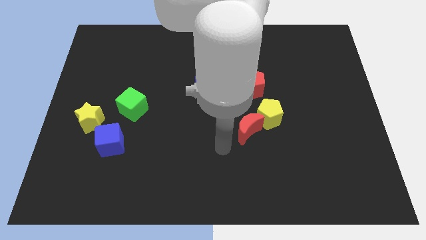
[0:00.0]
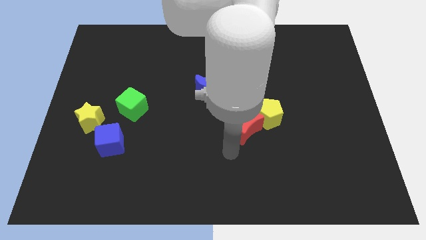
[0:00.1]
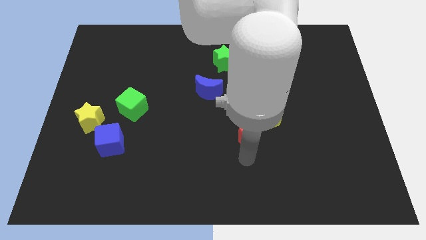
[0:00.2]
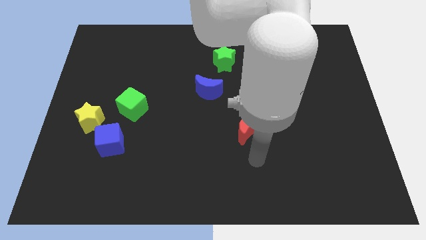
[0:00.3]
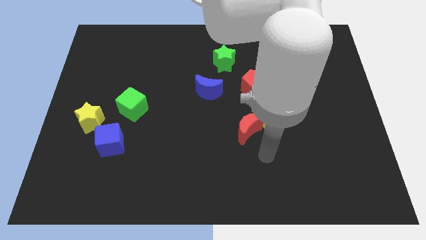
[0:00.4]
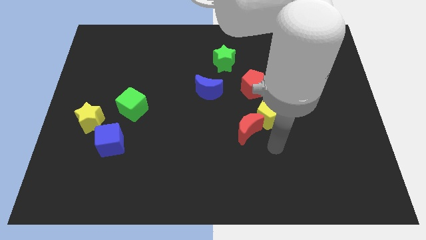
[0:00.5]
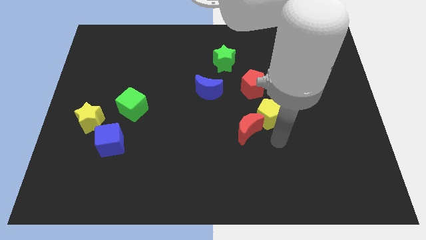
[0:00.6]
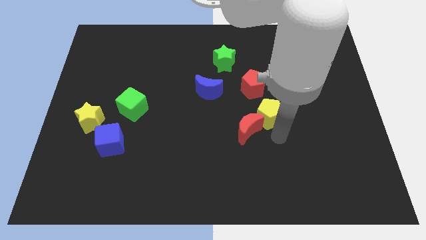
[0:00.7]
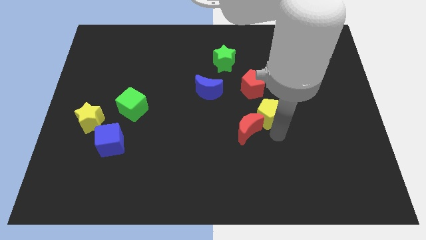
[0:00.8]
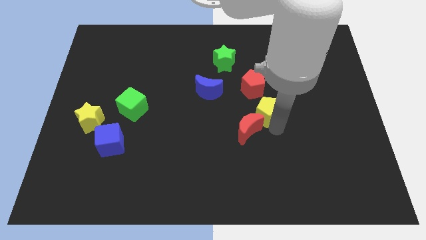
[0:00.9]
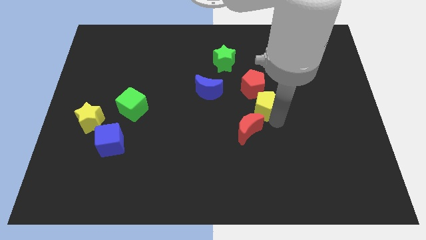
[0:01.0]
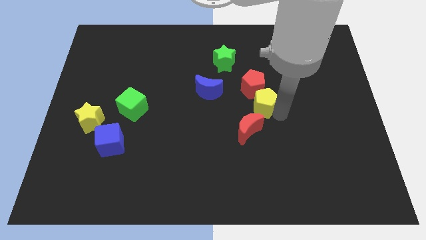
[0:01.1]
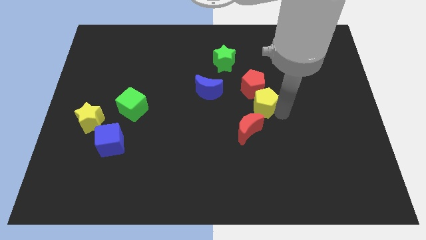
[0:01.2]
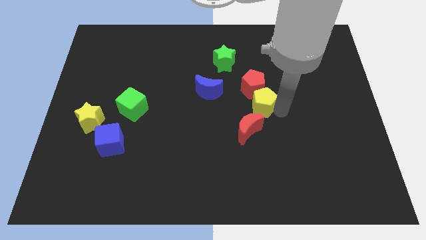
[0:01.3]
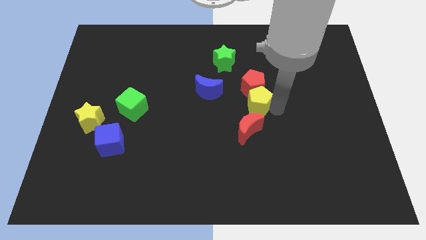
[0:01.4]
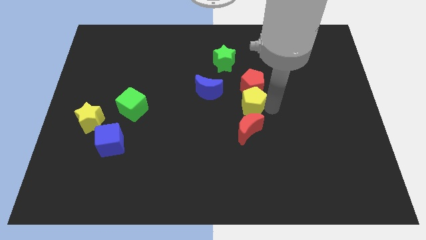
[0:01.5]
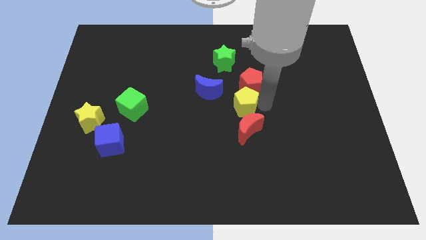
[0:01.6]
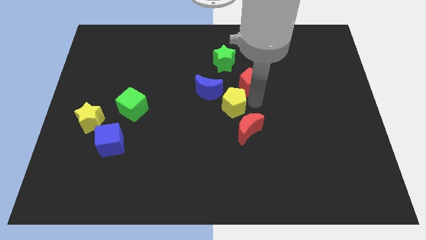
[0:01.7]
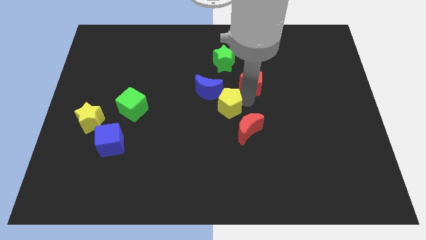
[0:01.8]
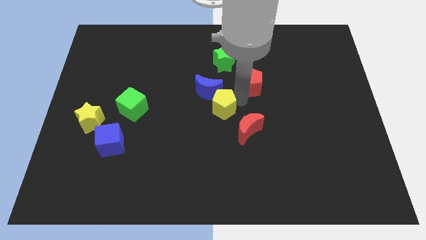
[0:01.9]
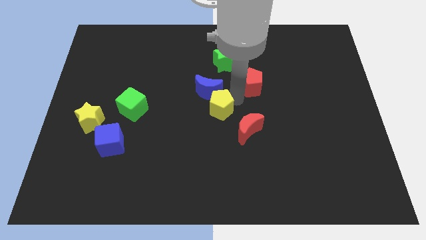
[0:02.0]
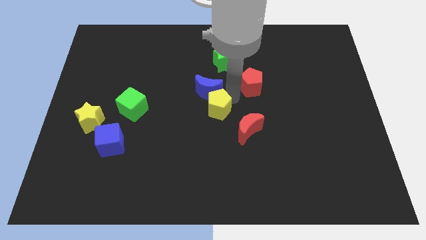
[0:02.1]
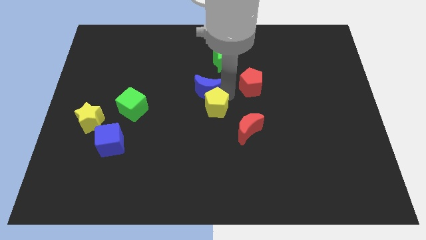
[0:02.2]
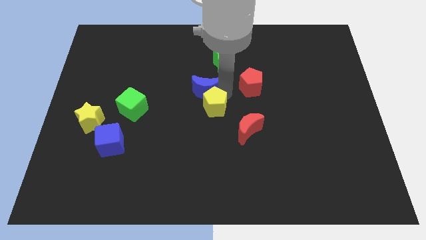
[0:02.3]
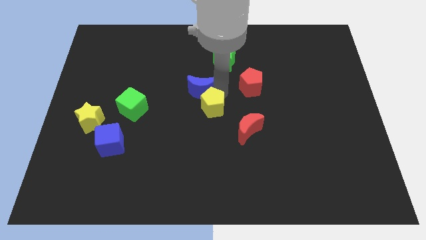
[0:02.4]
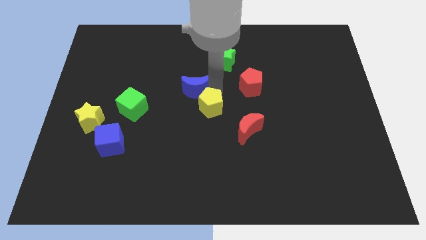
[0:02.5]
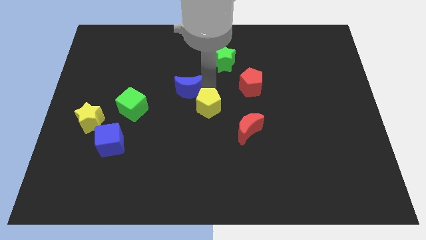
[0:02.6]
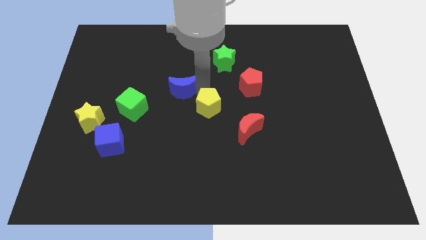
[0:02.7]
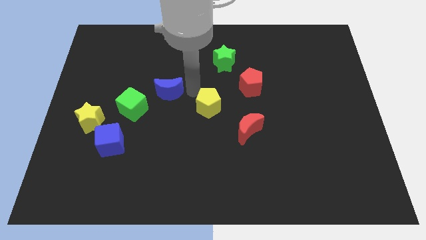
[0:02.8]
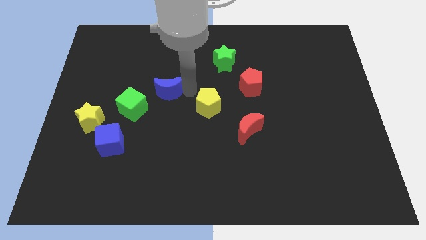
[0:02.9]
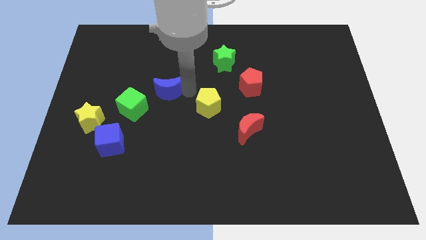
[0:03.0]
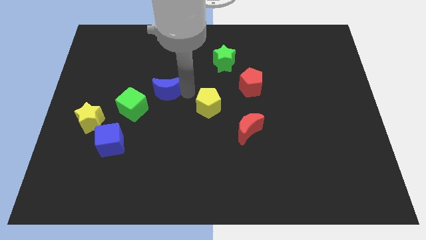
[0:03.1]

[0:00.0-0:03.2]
move blue moon slightly left along with the yellow pentagon

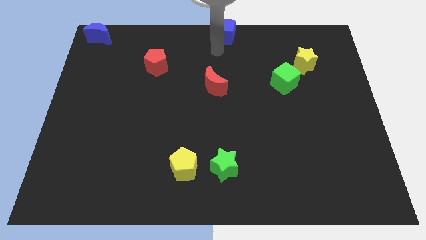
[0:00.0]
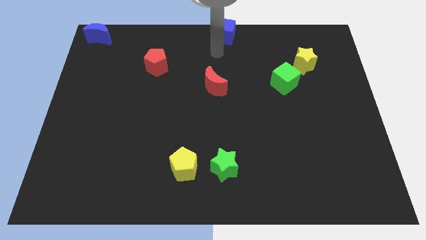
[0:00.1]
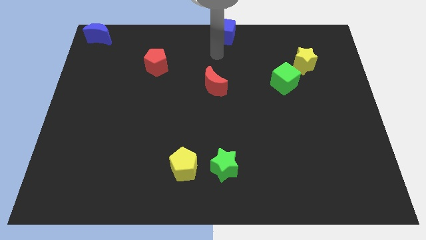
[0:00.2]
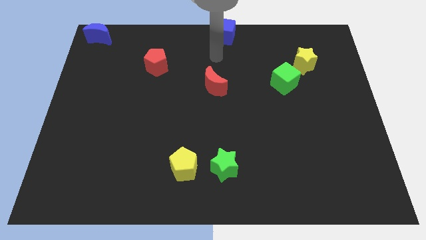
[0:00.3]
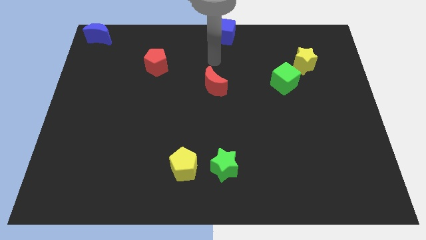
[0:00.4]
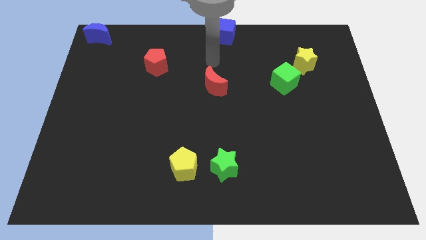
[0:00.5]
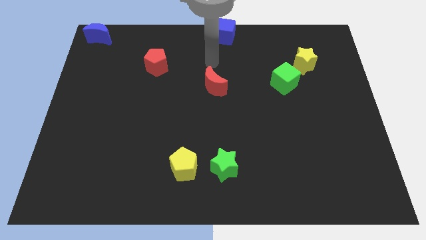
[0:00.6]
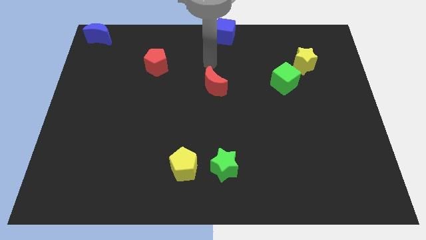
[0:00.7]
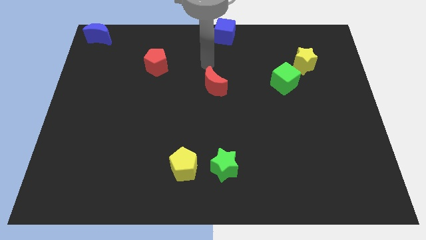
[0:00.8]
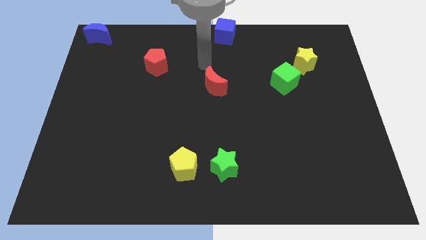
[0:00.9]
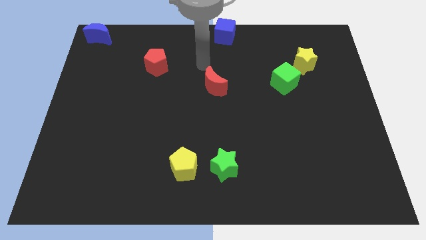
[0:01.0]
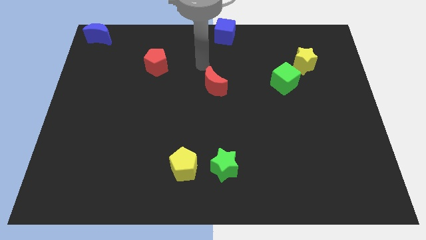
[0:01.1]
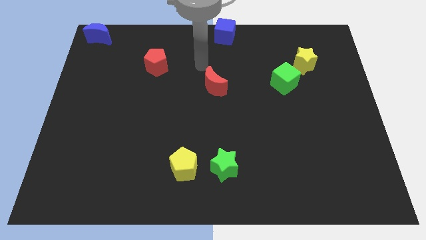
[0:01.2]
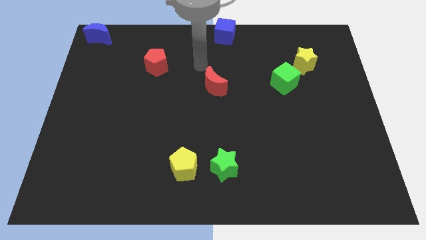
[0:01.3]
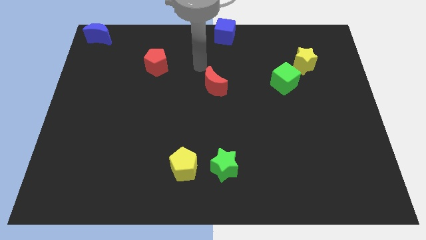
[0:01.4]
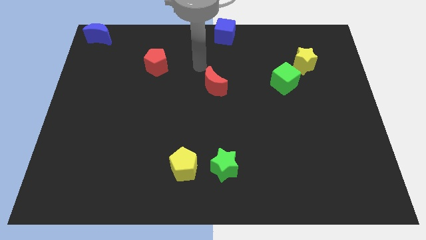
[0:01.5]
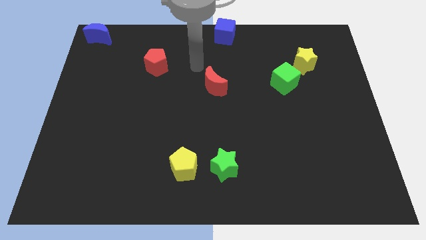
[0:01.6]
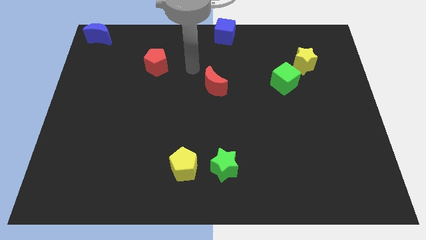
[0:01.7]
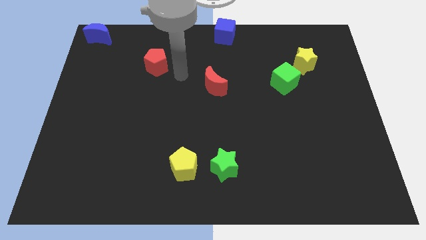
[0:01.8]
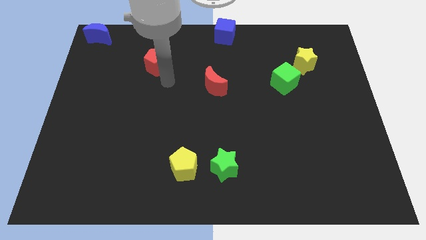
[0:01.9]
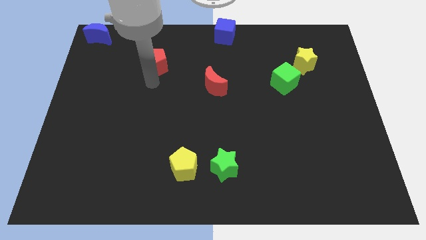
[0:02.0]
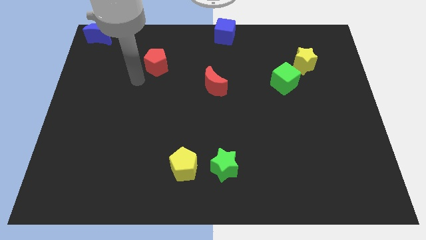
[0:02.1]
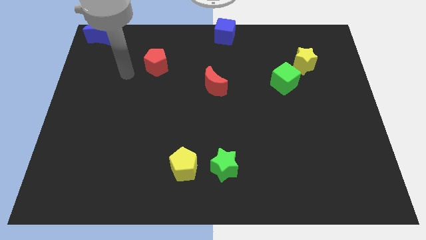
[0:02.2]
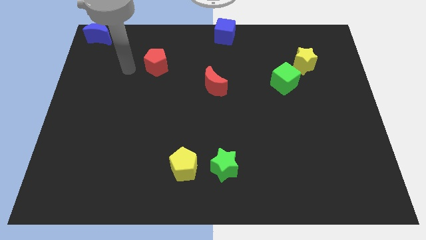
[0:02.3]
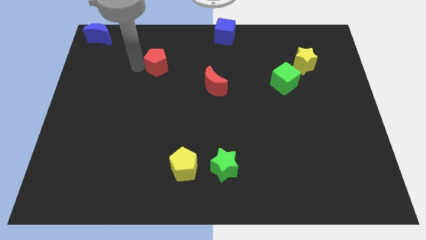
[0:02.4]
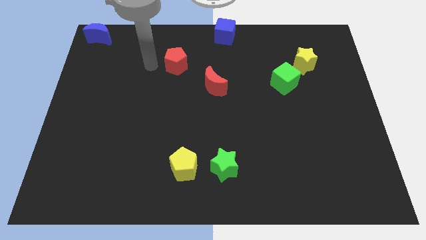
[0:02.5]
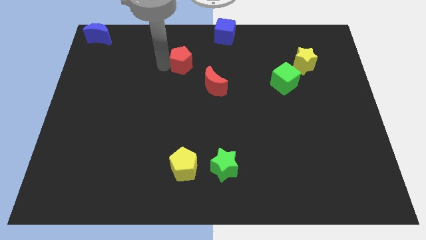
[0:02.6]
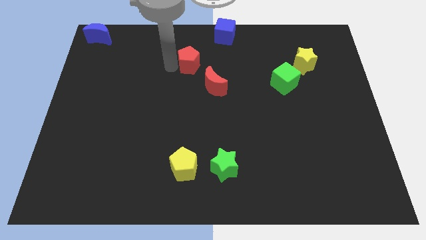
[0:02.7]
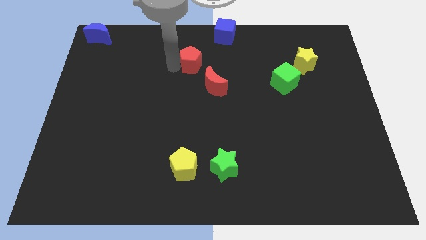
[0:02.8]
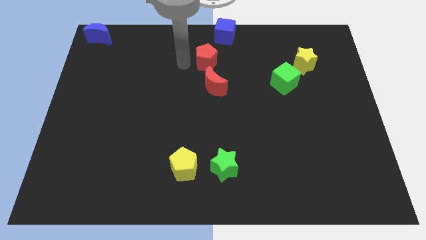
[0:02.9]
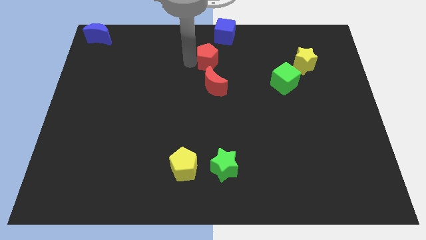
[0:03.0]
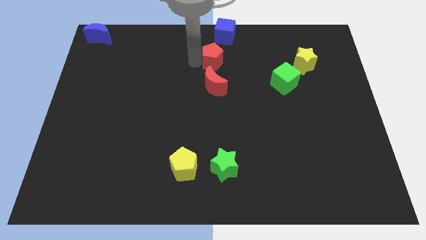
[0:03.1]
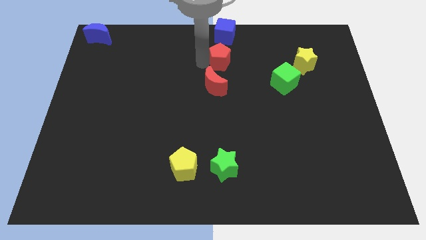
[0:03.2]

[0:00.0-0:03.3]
place the red pentagon in between the blue cube and red moon

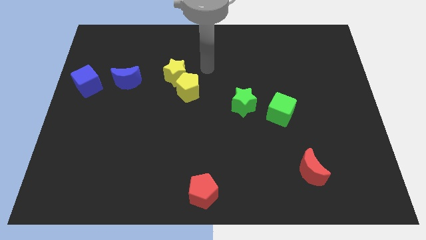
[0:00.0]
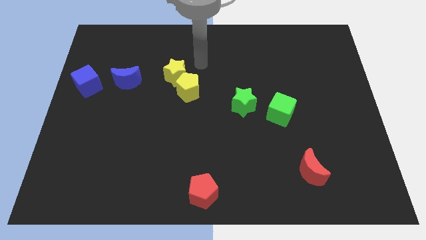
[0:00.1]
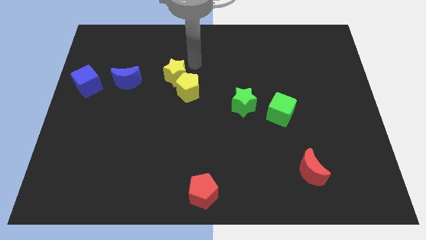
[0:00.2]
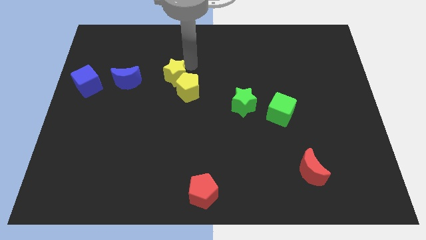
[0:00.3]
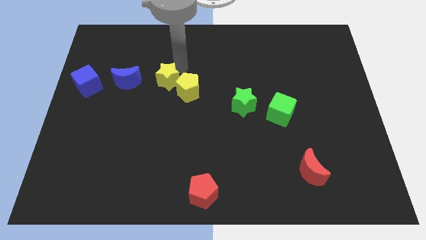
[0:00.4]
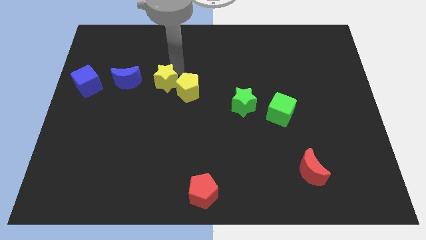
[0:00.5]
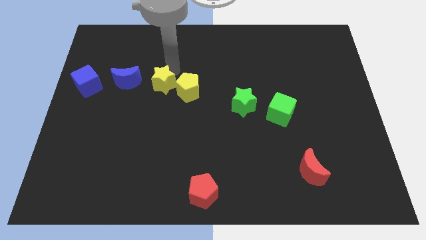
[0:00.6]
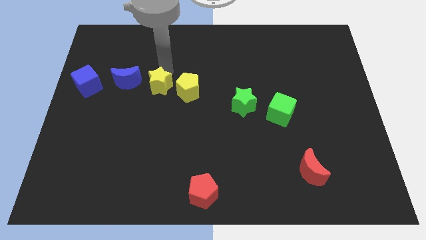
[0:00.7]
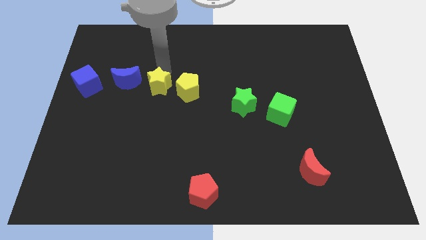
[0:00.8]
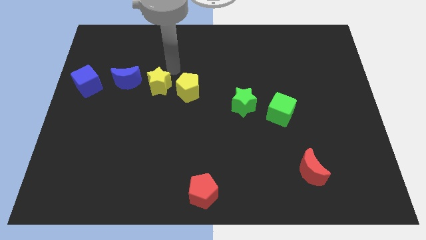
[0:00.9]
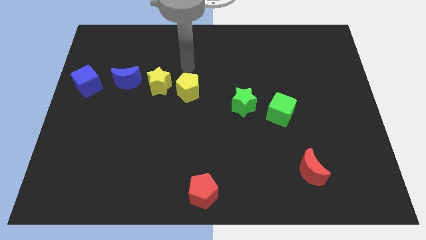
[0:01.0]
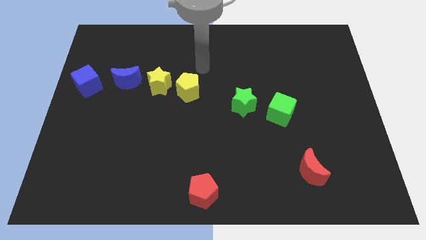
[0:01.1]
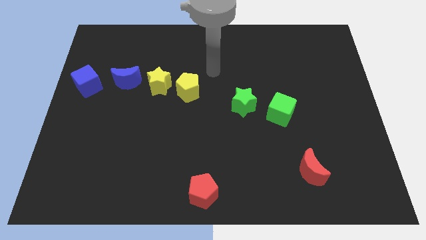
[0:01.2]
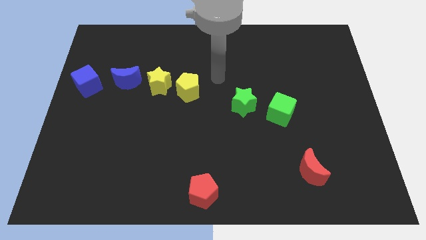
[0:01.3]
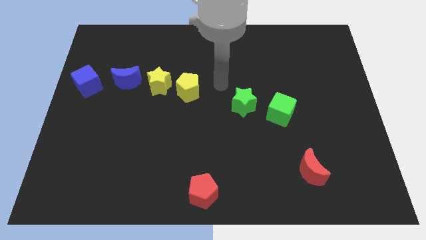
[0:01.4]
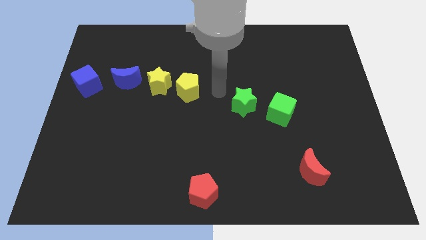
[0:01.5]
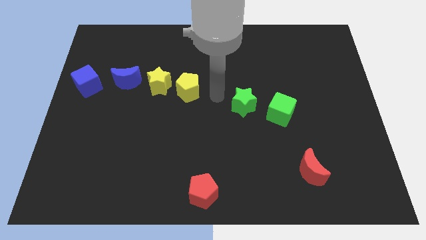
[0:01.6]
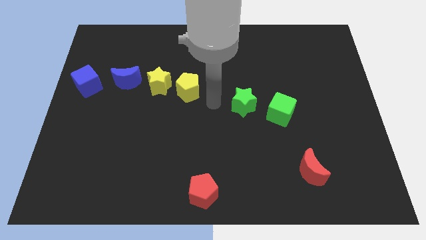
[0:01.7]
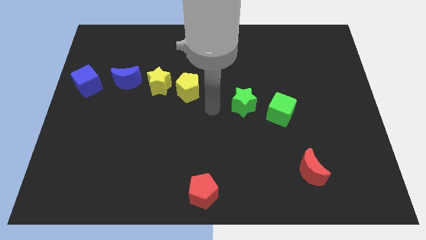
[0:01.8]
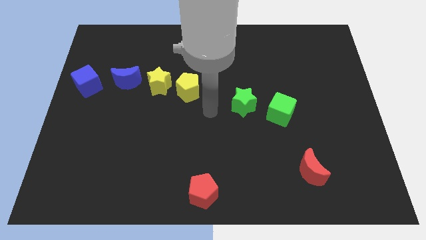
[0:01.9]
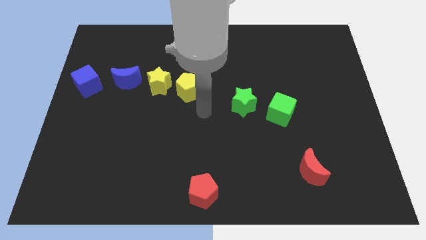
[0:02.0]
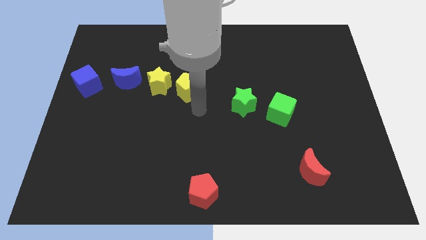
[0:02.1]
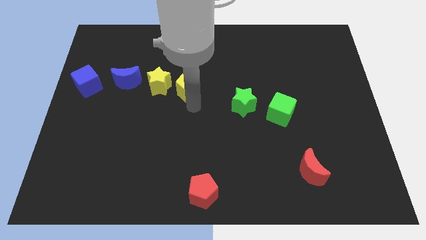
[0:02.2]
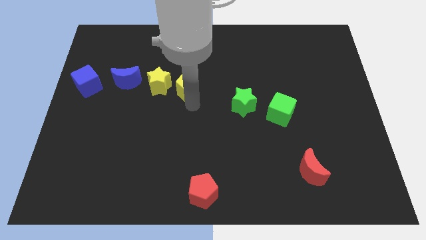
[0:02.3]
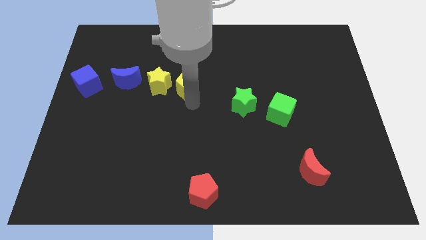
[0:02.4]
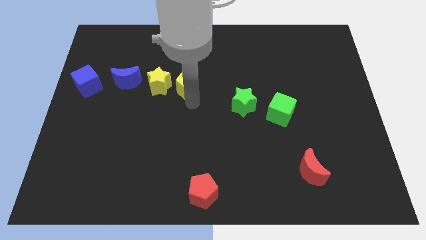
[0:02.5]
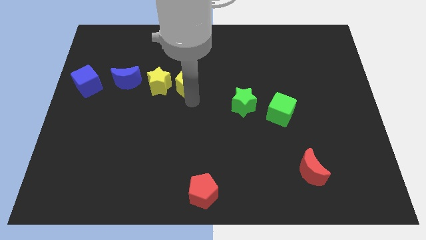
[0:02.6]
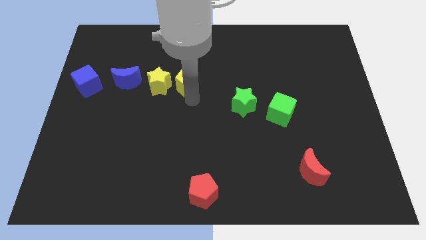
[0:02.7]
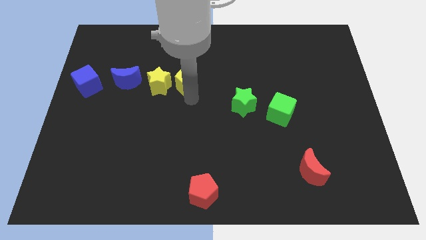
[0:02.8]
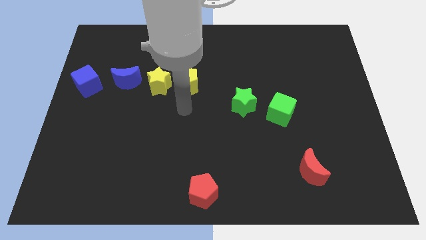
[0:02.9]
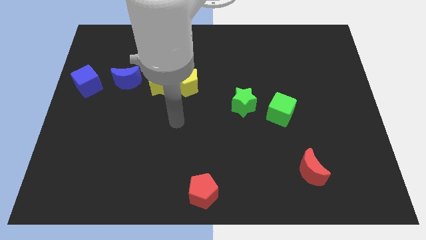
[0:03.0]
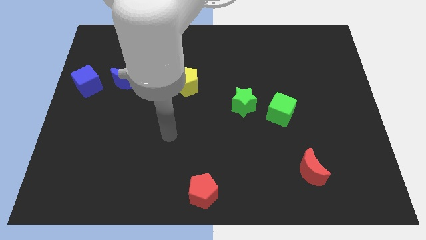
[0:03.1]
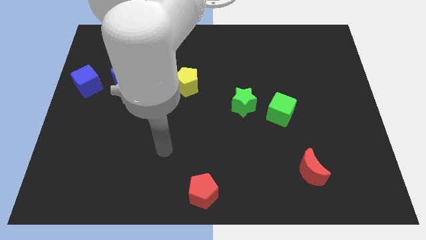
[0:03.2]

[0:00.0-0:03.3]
slightly move the yellow pentagon up
